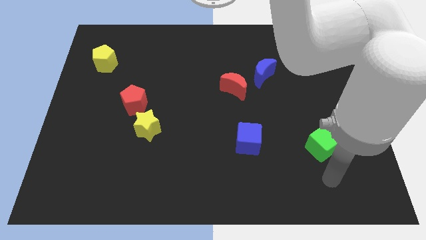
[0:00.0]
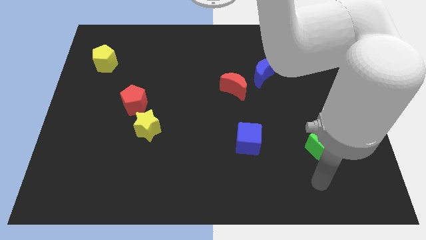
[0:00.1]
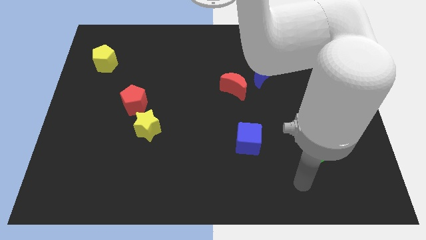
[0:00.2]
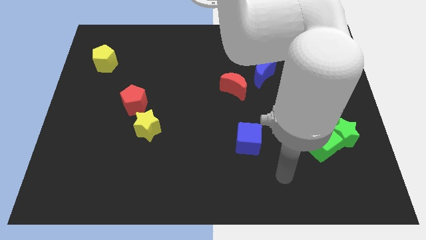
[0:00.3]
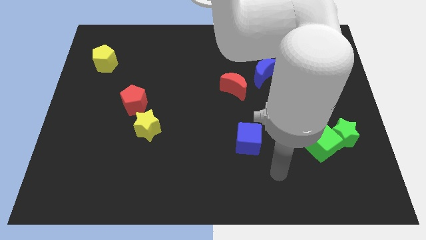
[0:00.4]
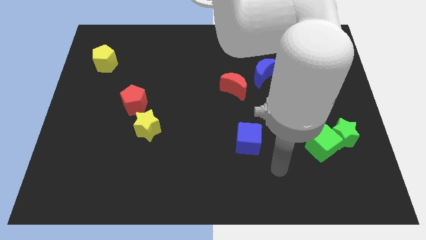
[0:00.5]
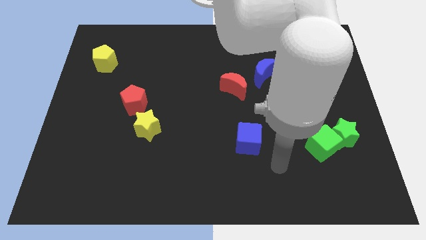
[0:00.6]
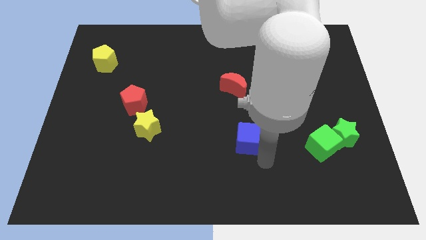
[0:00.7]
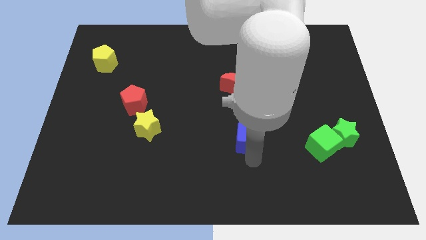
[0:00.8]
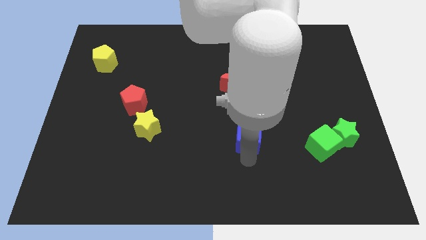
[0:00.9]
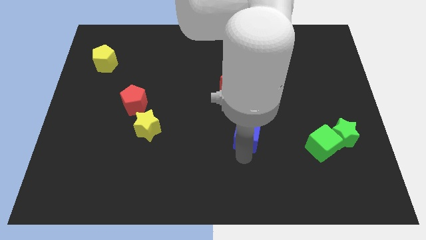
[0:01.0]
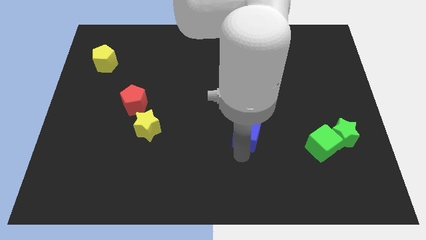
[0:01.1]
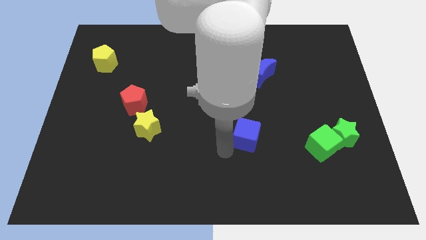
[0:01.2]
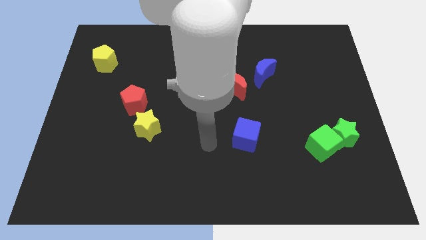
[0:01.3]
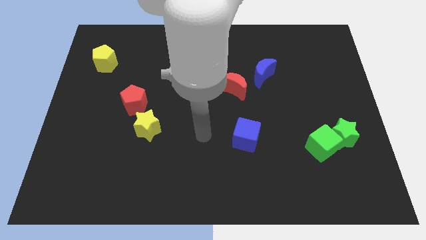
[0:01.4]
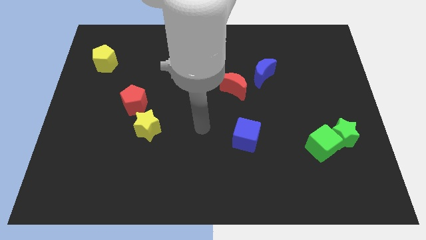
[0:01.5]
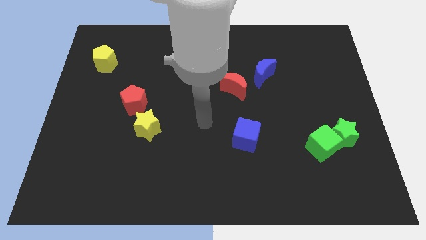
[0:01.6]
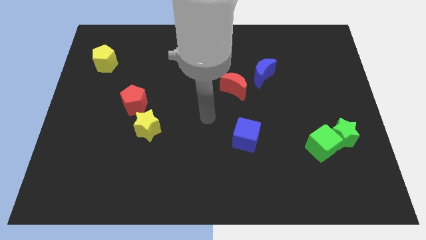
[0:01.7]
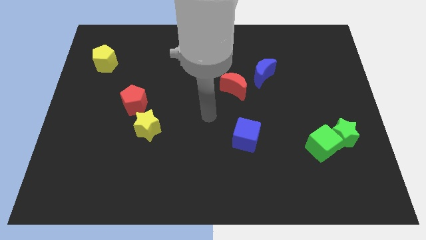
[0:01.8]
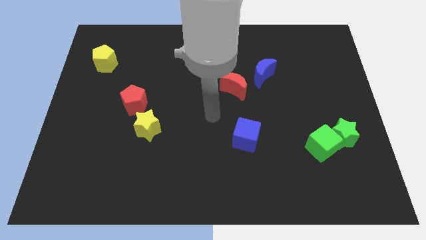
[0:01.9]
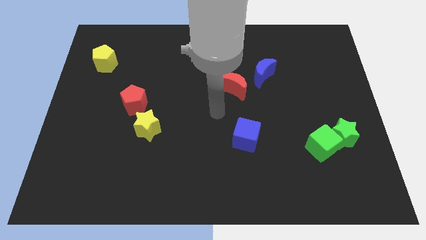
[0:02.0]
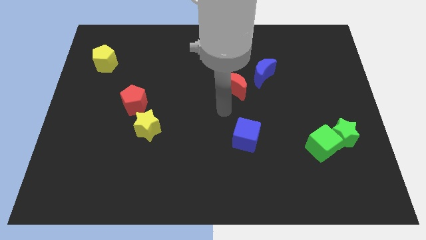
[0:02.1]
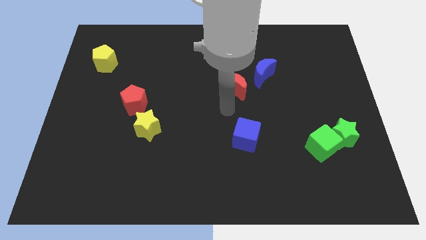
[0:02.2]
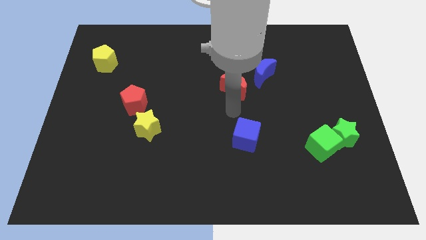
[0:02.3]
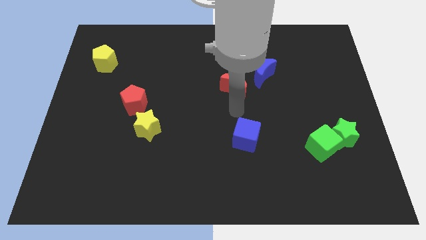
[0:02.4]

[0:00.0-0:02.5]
move the arm towards the blue cube

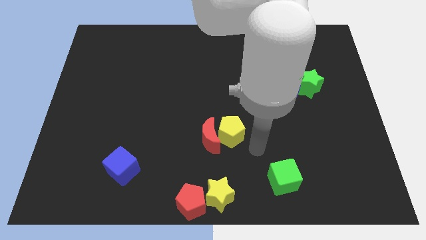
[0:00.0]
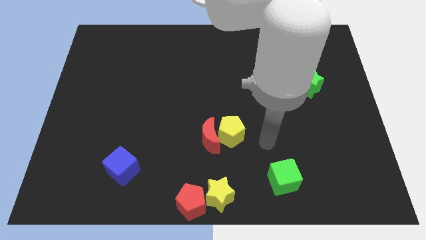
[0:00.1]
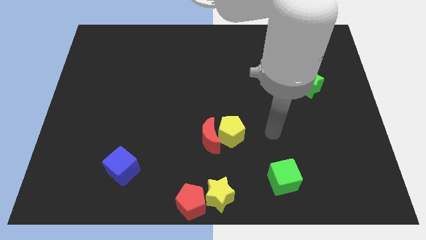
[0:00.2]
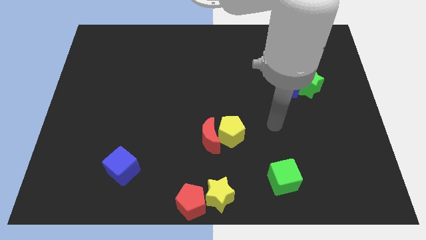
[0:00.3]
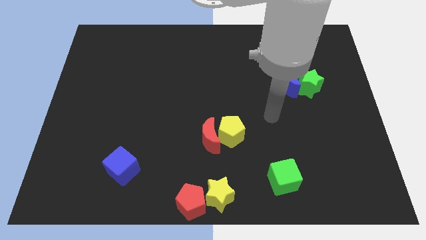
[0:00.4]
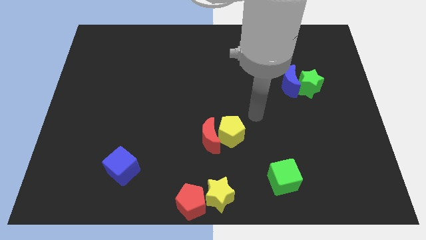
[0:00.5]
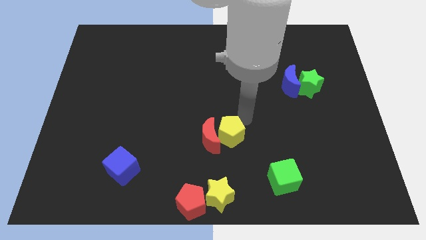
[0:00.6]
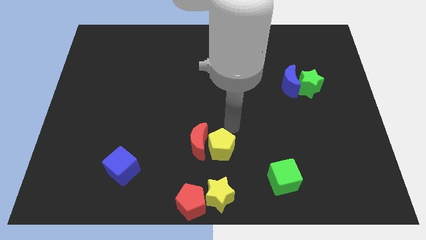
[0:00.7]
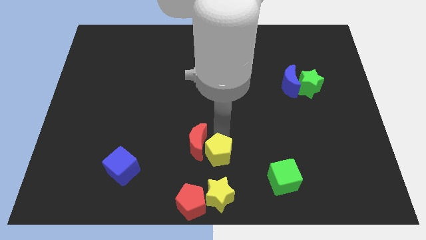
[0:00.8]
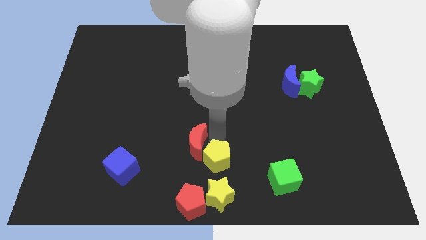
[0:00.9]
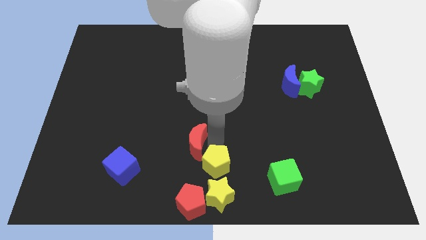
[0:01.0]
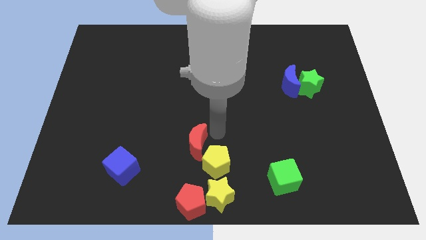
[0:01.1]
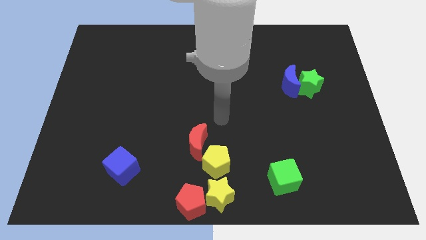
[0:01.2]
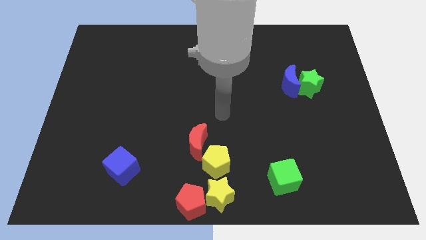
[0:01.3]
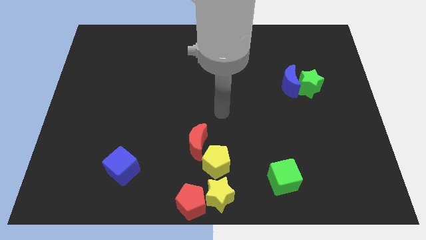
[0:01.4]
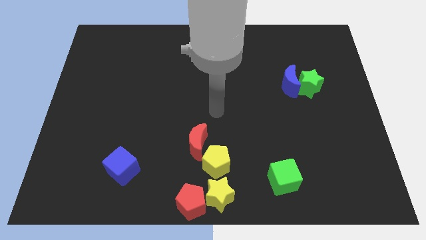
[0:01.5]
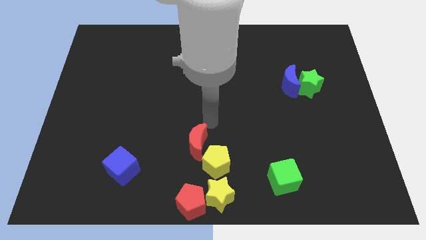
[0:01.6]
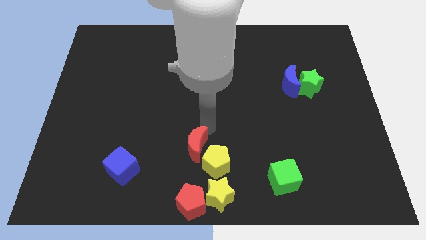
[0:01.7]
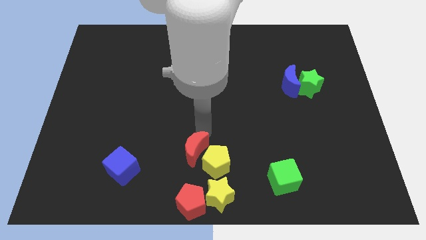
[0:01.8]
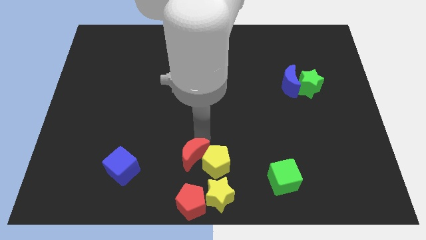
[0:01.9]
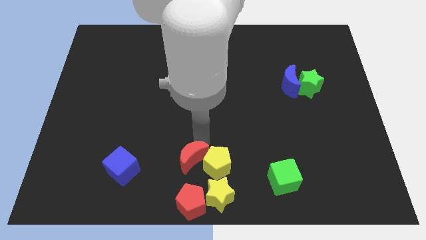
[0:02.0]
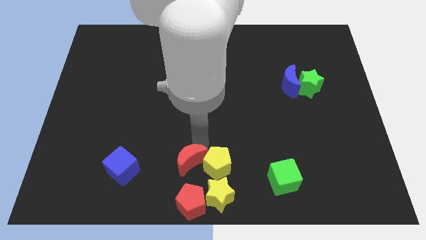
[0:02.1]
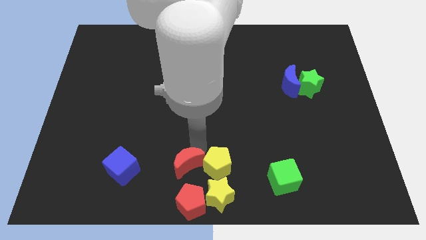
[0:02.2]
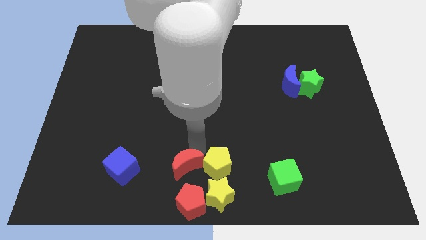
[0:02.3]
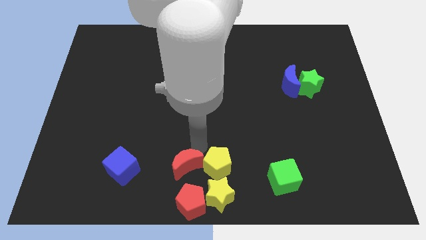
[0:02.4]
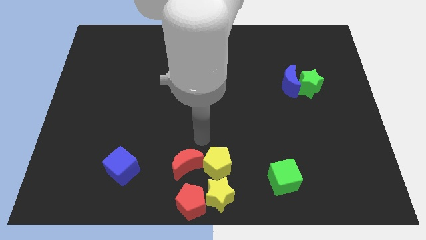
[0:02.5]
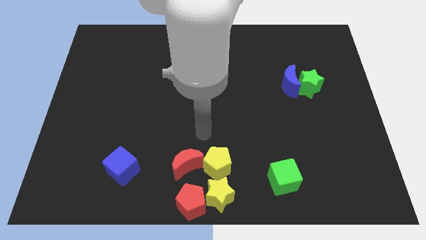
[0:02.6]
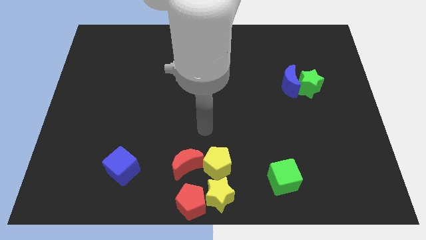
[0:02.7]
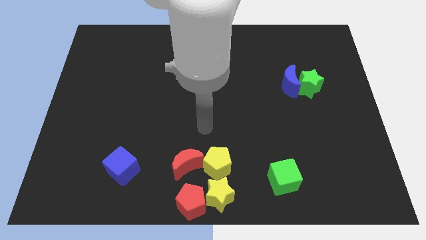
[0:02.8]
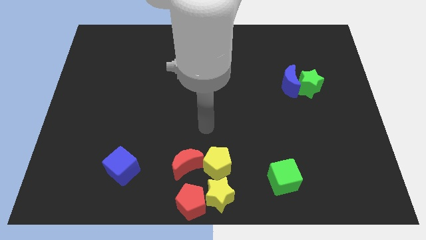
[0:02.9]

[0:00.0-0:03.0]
place yellow pentagon to the top of yellow star

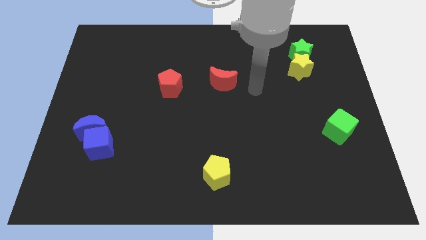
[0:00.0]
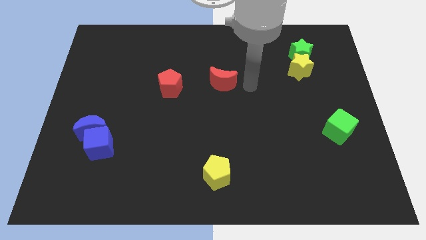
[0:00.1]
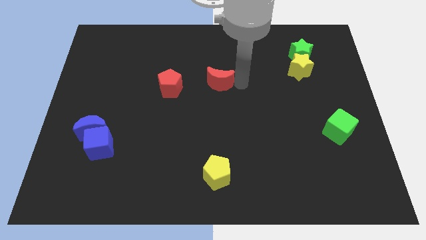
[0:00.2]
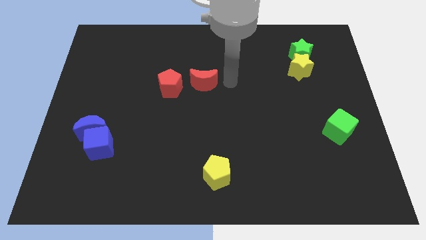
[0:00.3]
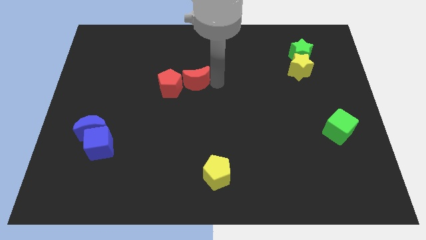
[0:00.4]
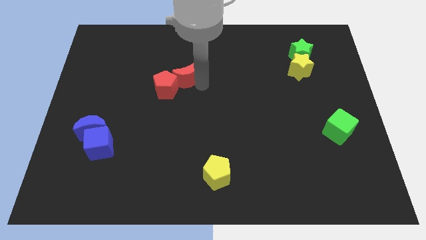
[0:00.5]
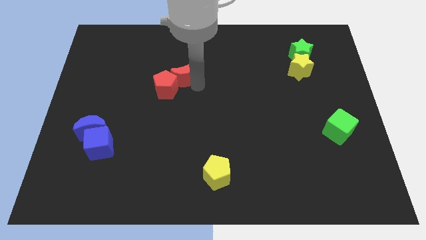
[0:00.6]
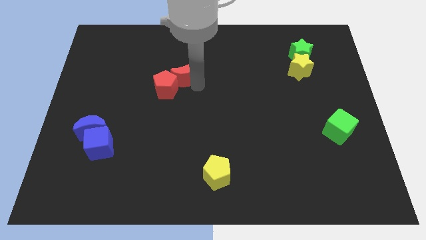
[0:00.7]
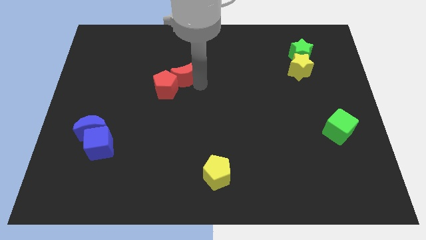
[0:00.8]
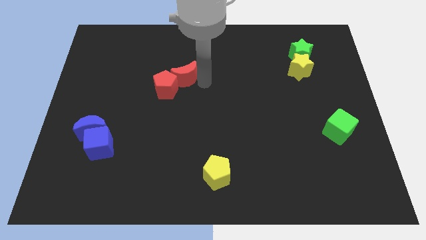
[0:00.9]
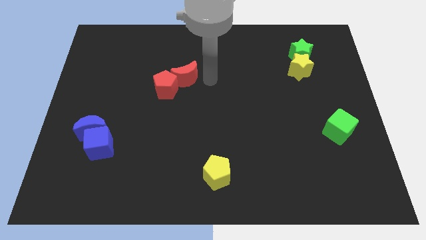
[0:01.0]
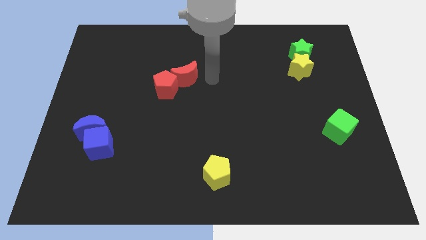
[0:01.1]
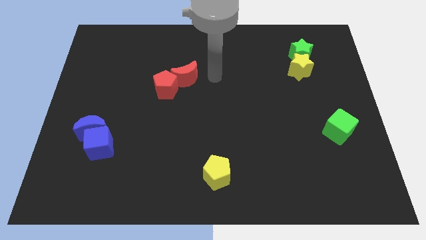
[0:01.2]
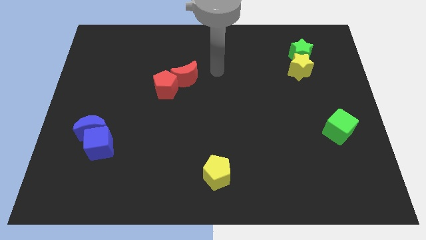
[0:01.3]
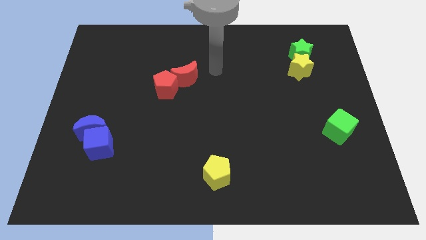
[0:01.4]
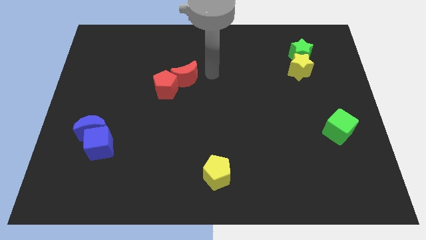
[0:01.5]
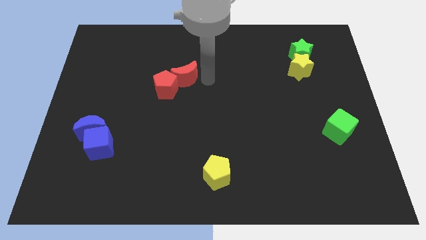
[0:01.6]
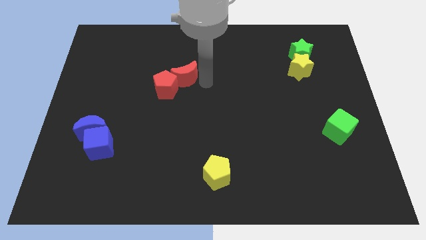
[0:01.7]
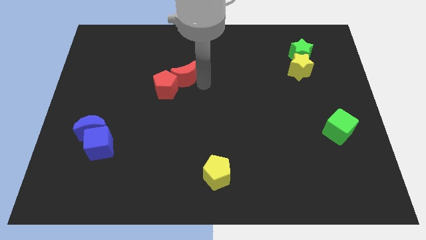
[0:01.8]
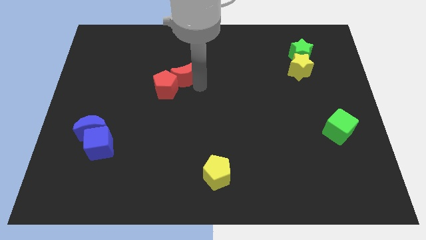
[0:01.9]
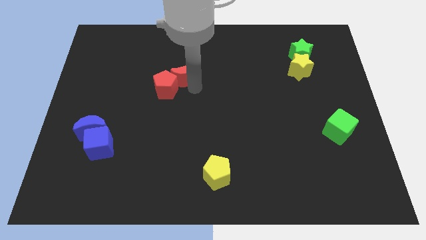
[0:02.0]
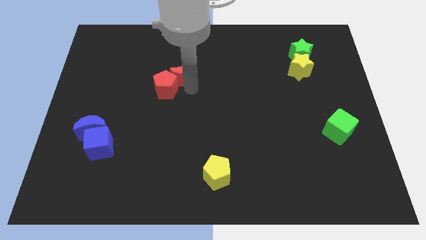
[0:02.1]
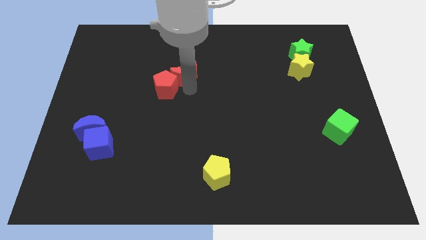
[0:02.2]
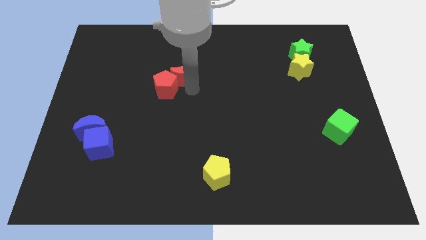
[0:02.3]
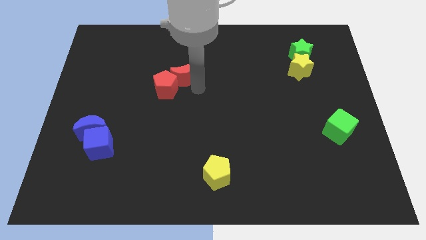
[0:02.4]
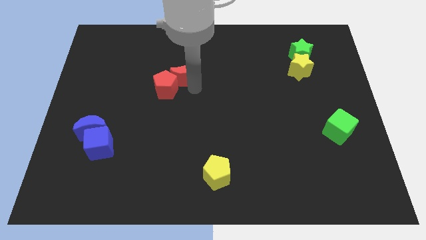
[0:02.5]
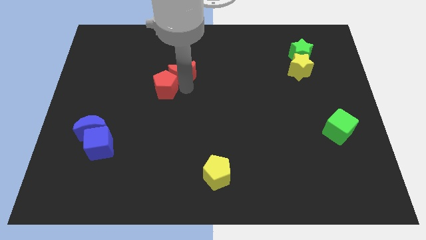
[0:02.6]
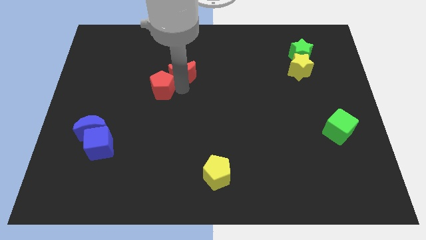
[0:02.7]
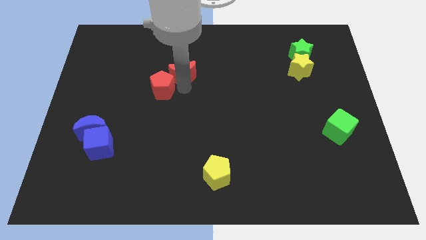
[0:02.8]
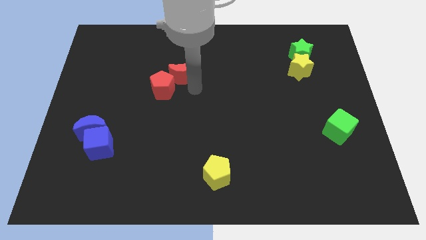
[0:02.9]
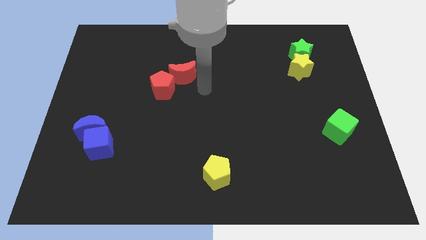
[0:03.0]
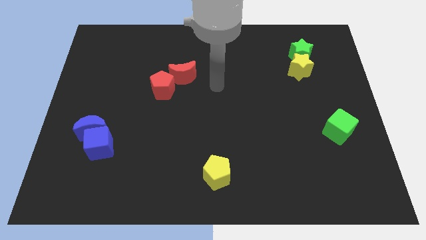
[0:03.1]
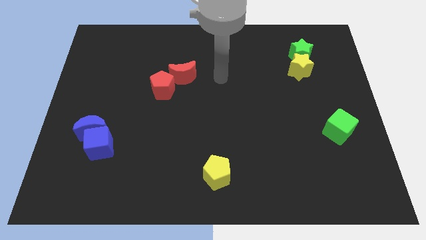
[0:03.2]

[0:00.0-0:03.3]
push red moon to the top right of red pentagon
